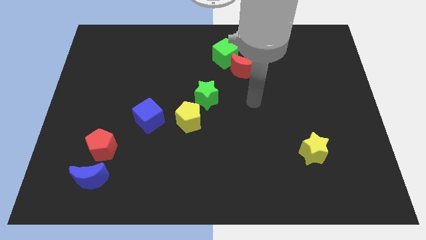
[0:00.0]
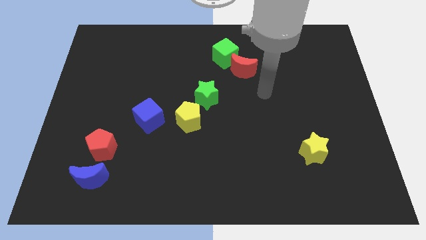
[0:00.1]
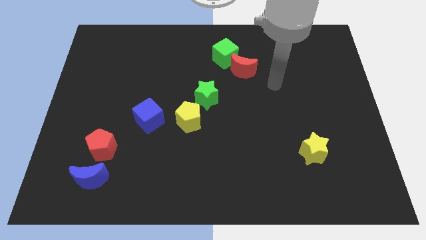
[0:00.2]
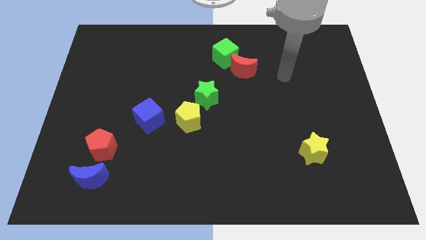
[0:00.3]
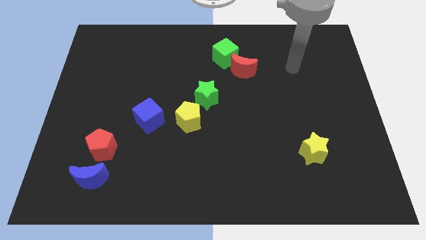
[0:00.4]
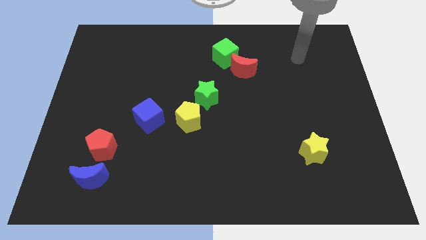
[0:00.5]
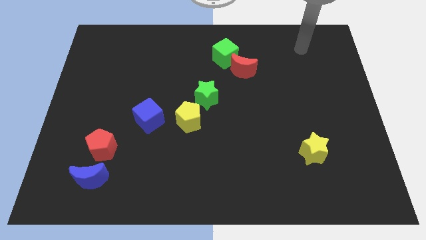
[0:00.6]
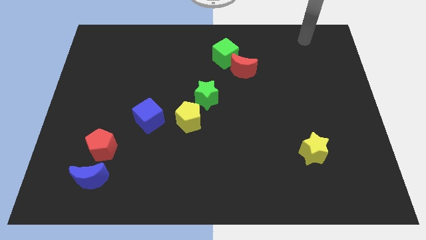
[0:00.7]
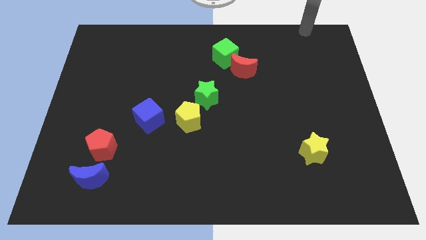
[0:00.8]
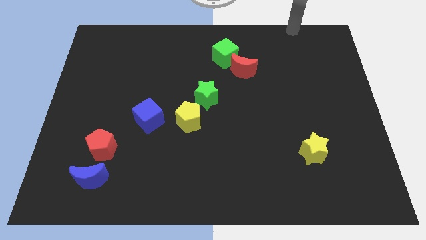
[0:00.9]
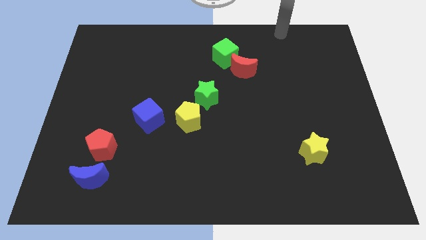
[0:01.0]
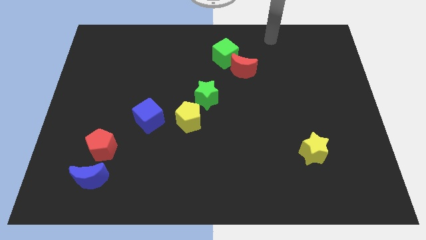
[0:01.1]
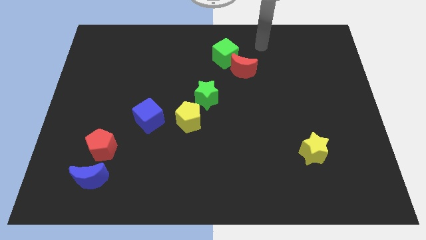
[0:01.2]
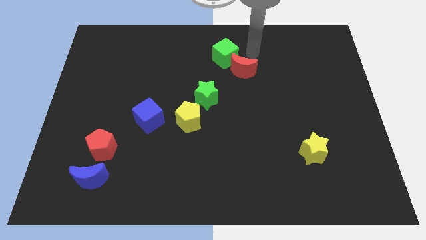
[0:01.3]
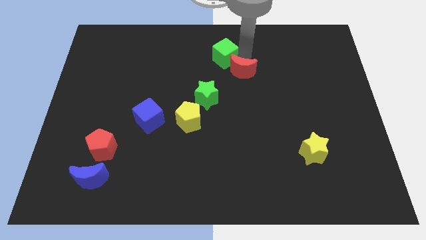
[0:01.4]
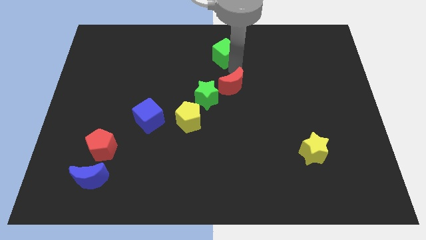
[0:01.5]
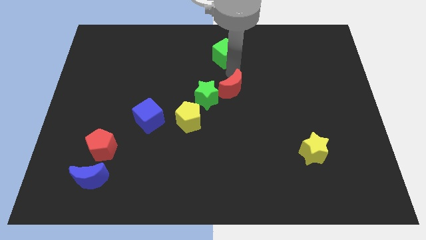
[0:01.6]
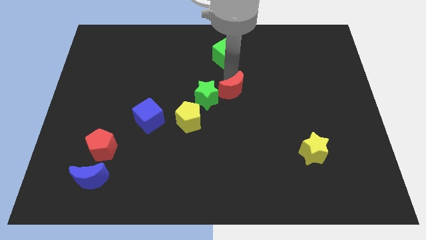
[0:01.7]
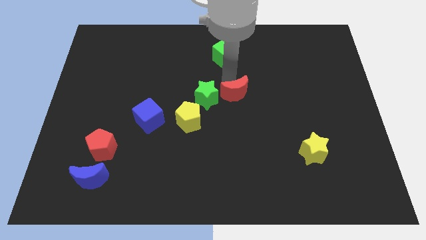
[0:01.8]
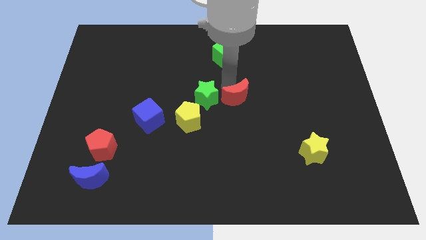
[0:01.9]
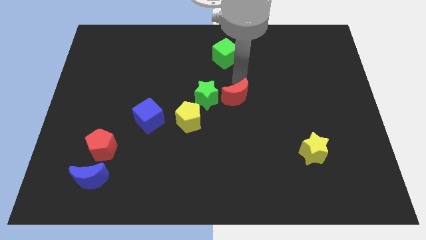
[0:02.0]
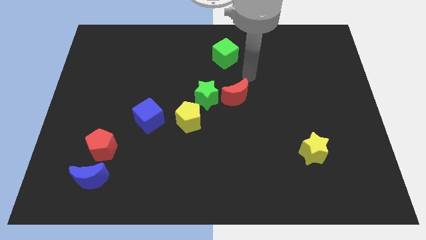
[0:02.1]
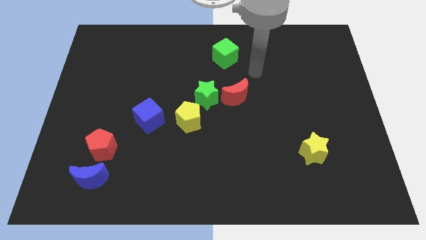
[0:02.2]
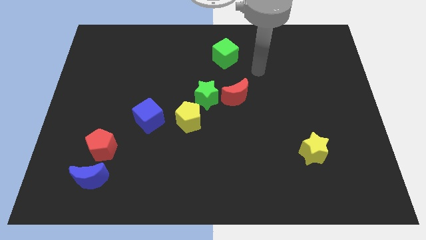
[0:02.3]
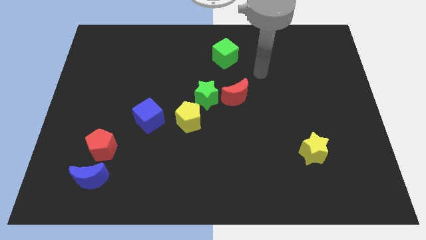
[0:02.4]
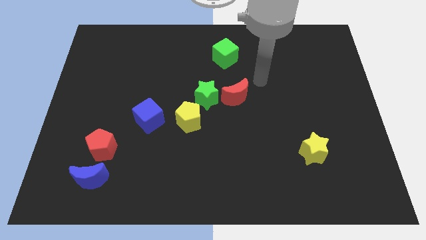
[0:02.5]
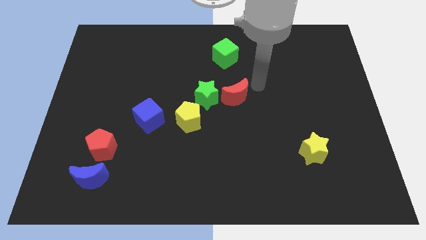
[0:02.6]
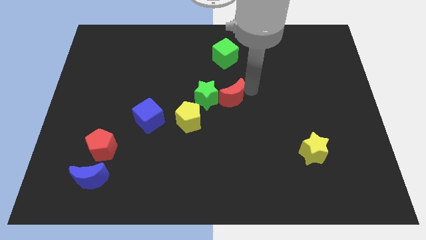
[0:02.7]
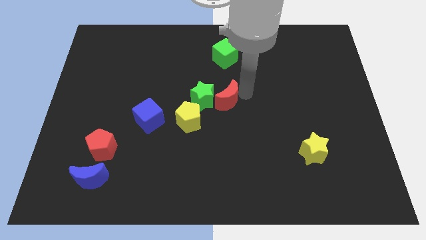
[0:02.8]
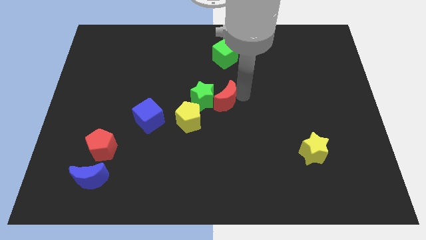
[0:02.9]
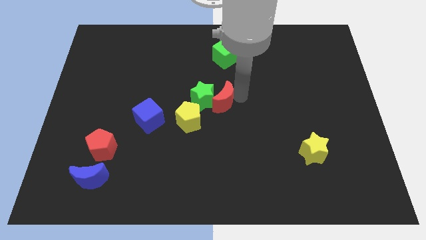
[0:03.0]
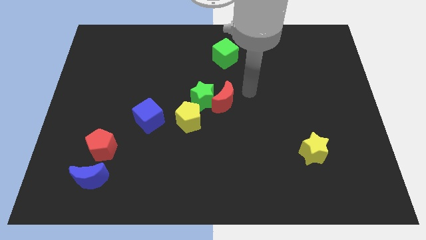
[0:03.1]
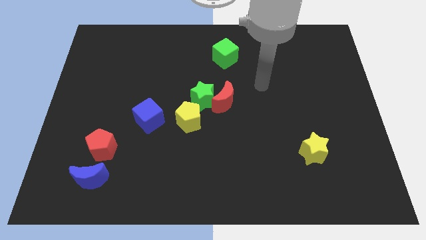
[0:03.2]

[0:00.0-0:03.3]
push the red moon into the green star

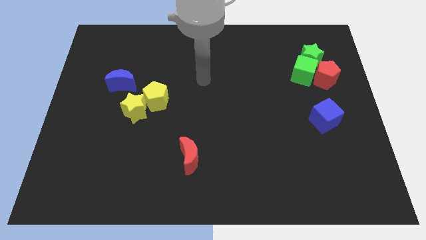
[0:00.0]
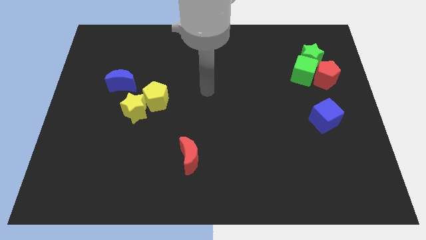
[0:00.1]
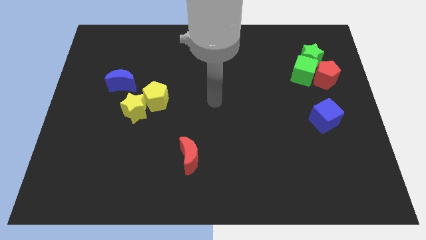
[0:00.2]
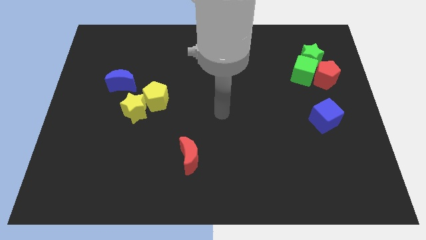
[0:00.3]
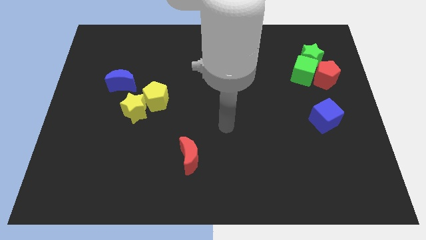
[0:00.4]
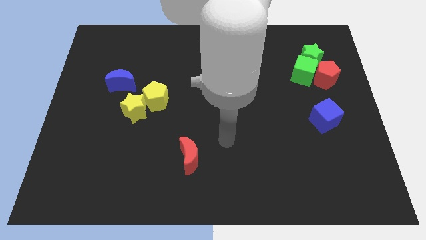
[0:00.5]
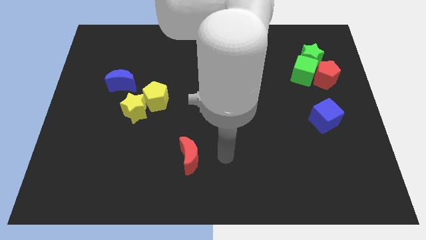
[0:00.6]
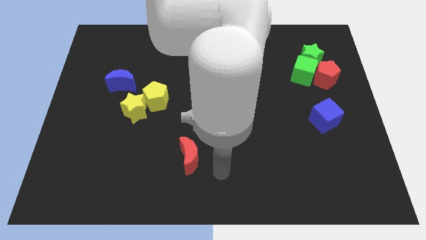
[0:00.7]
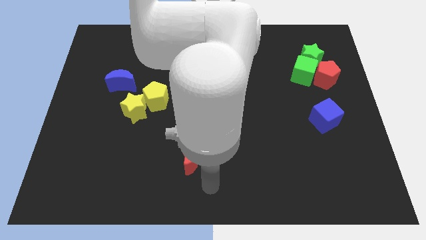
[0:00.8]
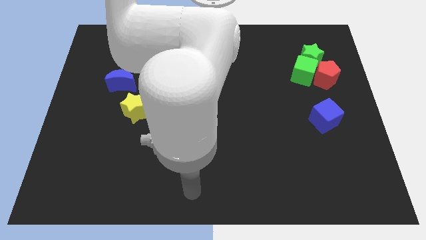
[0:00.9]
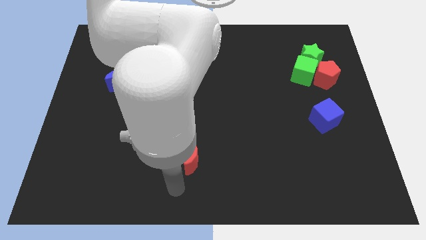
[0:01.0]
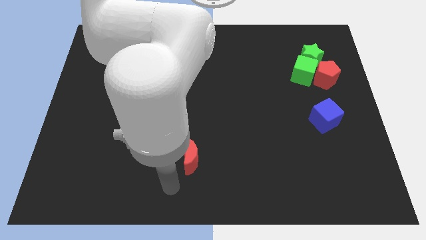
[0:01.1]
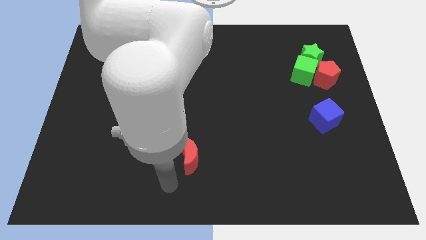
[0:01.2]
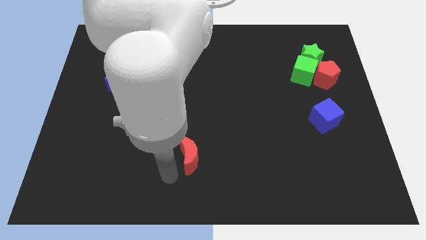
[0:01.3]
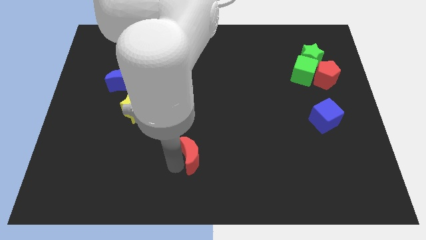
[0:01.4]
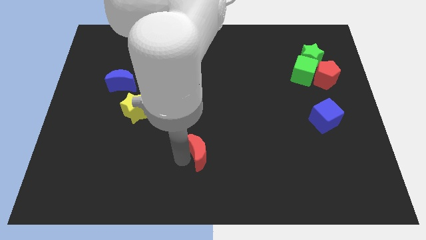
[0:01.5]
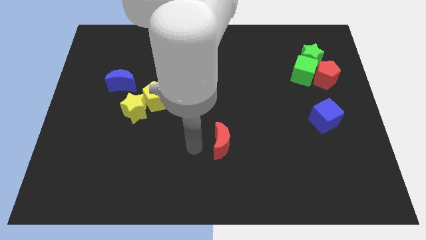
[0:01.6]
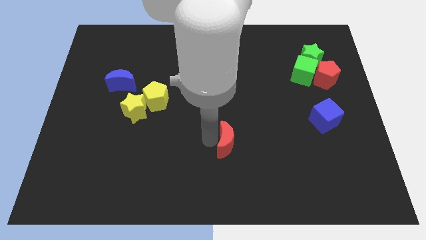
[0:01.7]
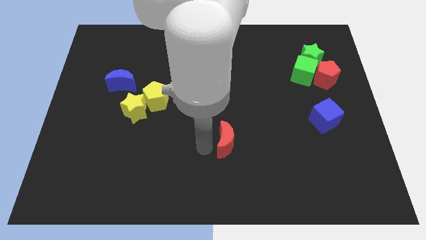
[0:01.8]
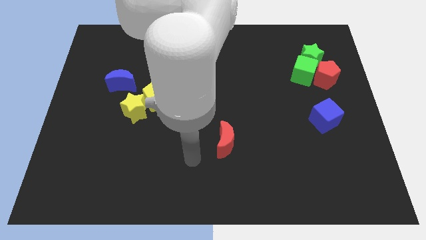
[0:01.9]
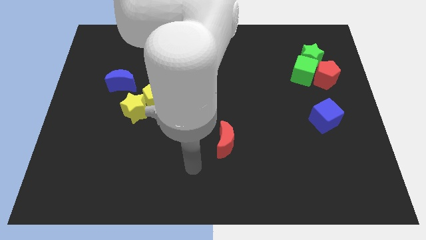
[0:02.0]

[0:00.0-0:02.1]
move red crescent slightly upwards

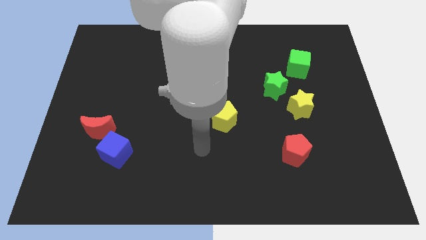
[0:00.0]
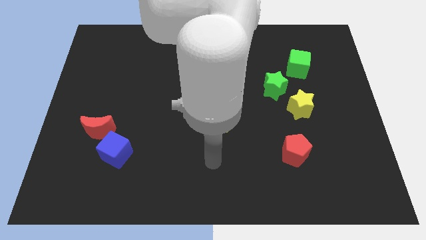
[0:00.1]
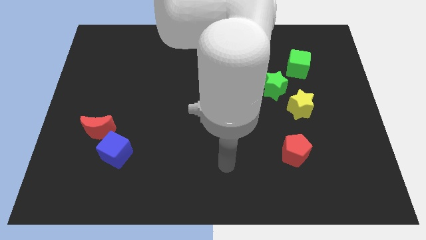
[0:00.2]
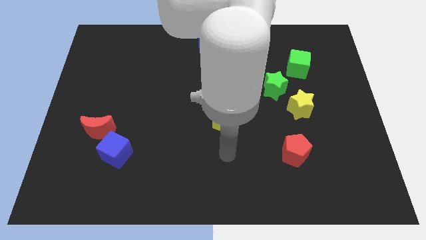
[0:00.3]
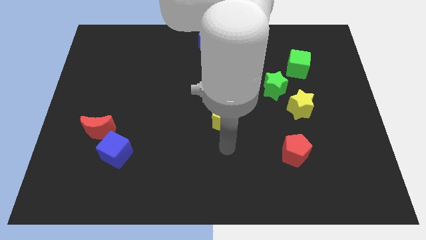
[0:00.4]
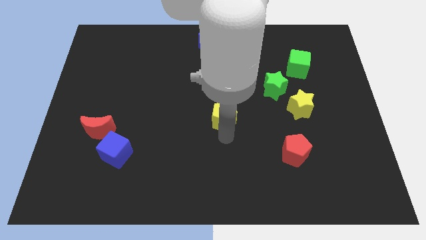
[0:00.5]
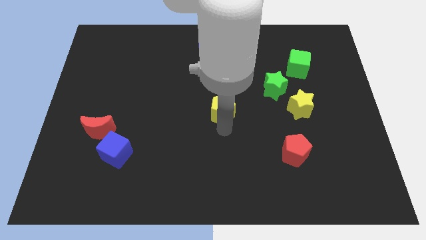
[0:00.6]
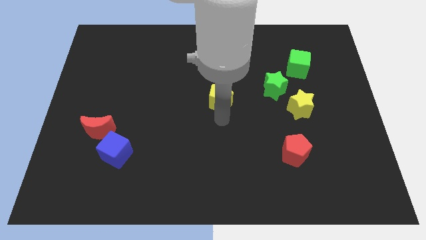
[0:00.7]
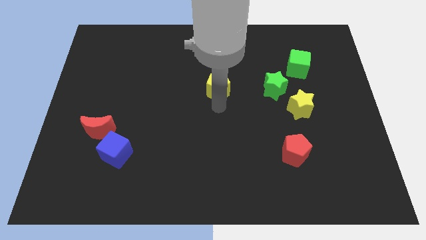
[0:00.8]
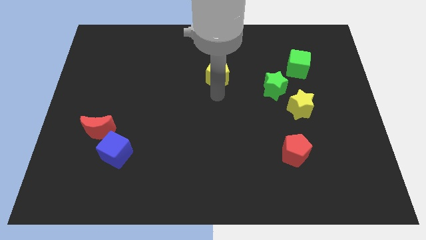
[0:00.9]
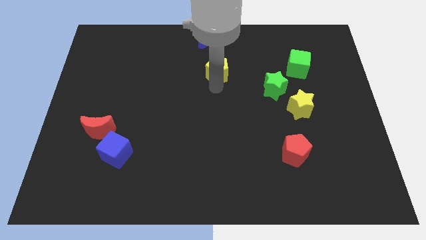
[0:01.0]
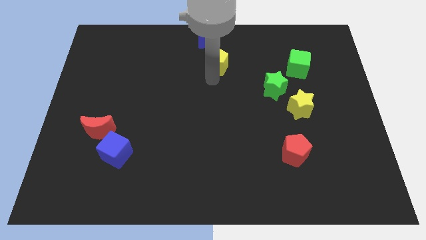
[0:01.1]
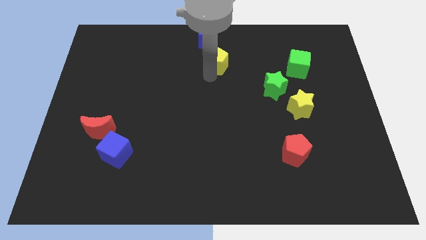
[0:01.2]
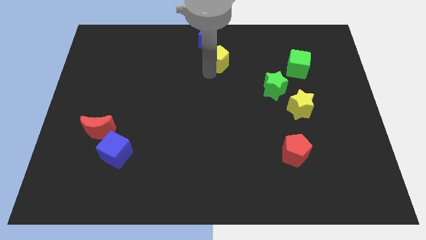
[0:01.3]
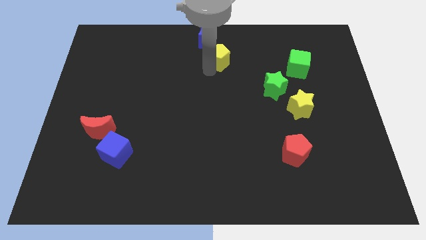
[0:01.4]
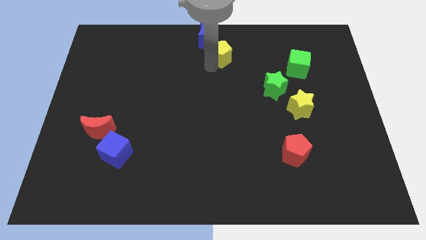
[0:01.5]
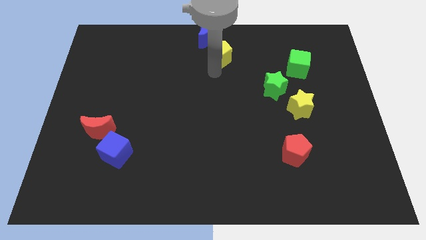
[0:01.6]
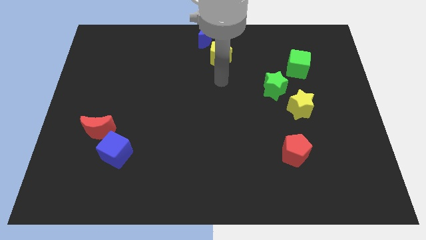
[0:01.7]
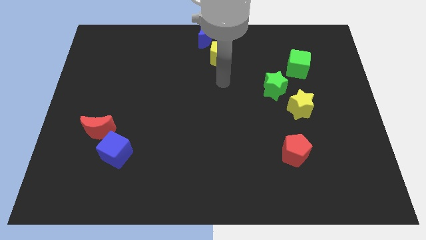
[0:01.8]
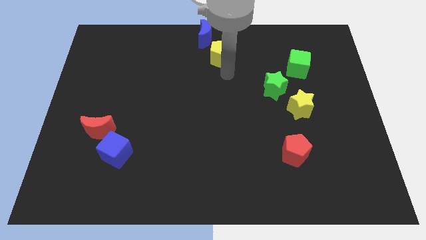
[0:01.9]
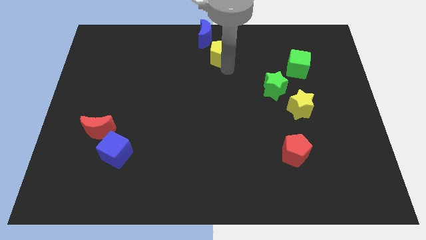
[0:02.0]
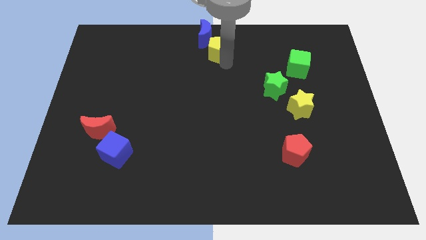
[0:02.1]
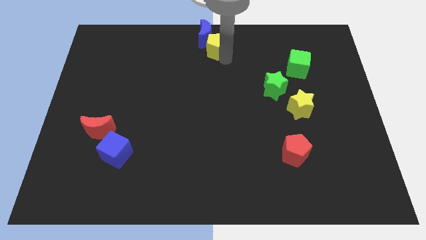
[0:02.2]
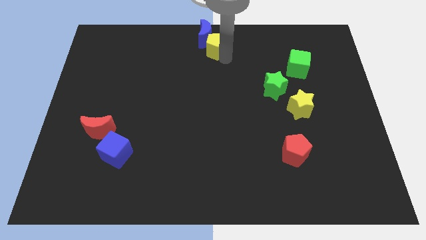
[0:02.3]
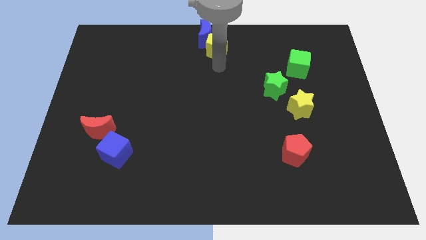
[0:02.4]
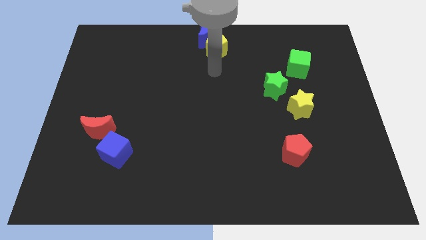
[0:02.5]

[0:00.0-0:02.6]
place yellow pentagon at the bottom of blue crescent

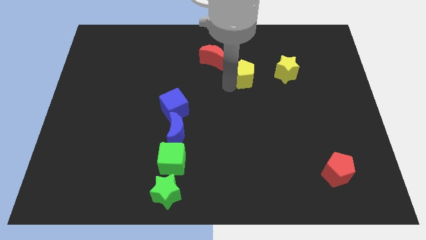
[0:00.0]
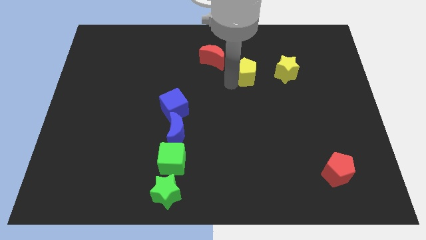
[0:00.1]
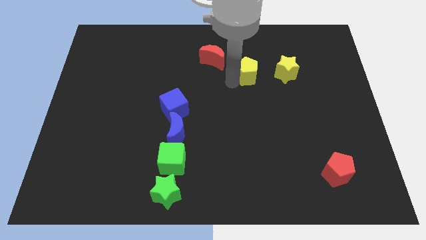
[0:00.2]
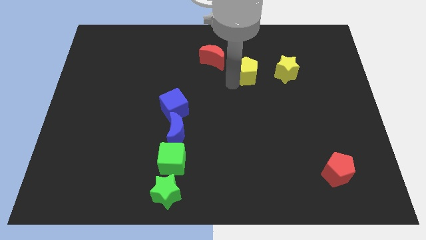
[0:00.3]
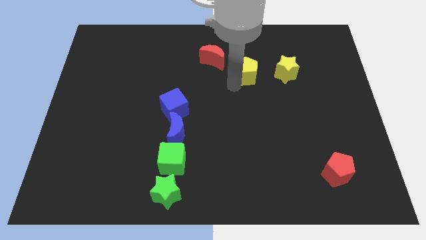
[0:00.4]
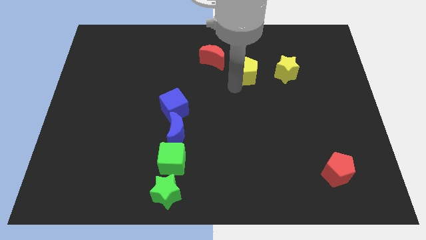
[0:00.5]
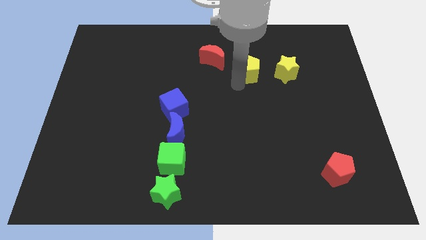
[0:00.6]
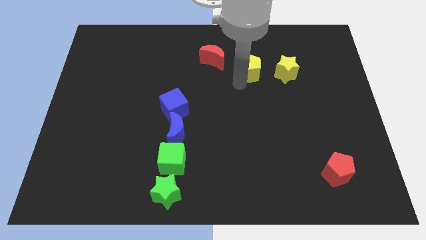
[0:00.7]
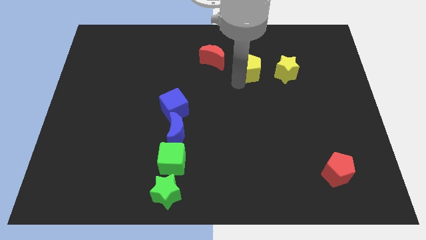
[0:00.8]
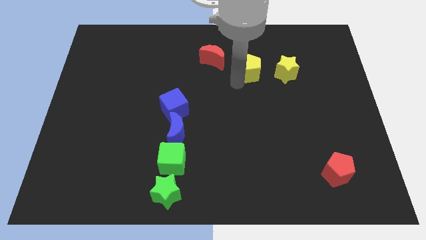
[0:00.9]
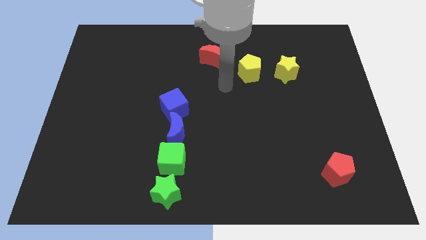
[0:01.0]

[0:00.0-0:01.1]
push the yellow pentagon to the left of the yellow star
